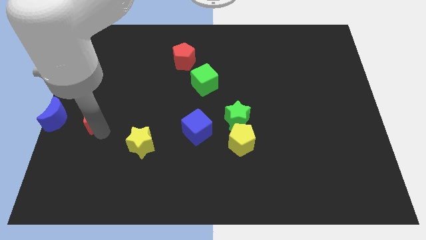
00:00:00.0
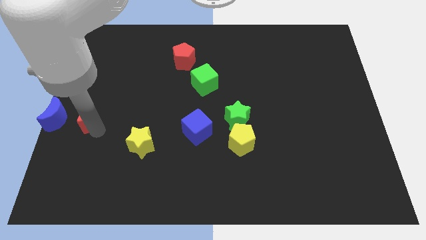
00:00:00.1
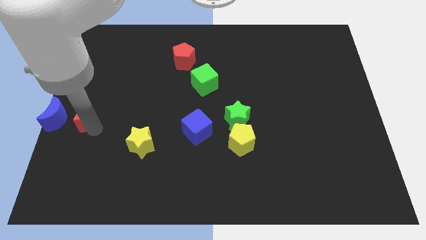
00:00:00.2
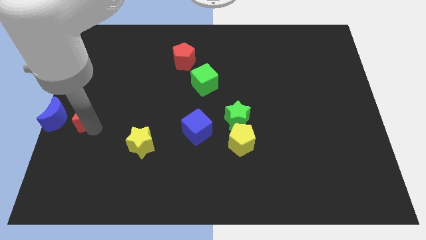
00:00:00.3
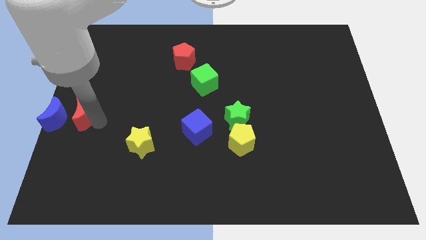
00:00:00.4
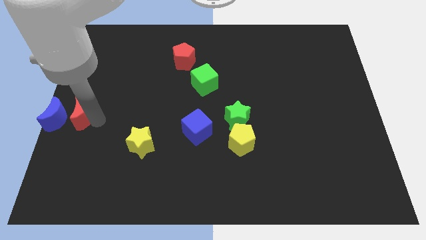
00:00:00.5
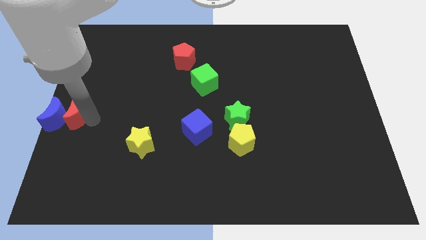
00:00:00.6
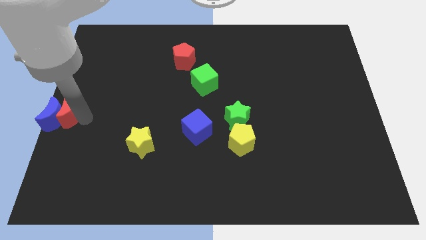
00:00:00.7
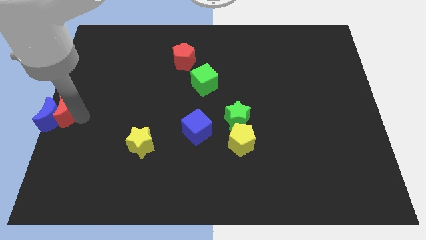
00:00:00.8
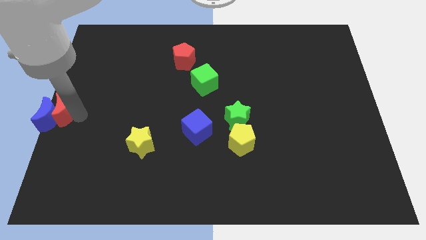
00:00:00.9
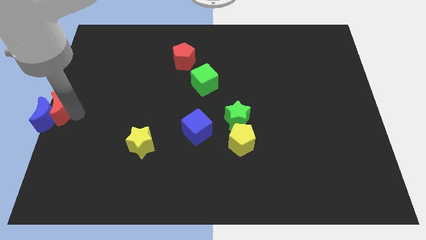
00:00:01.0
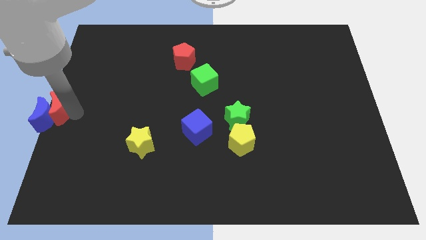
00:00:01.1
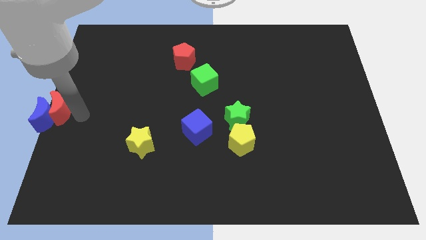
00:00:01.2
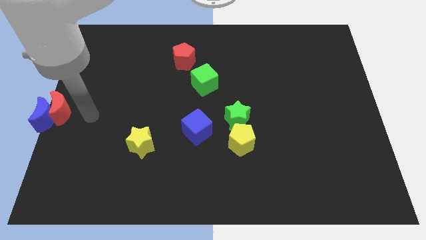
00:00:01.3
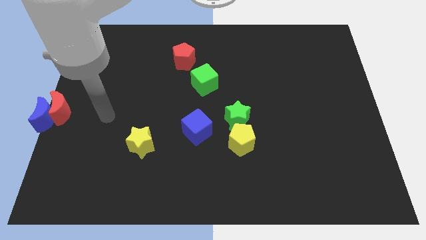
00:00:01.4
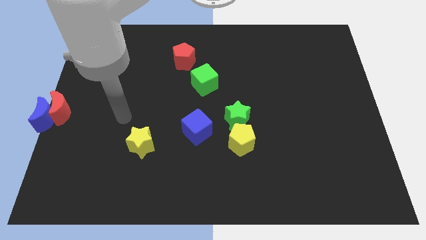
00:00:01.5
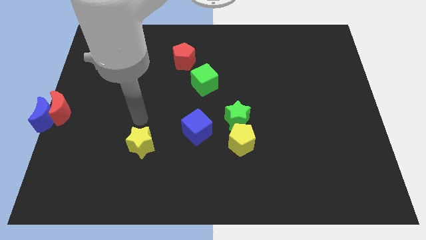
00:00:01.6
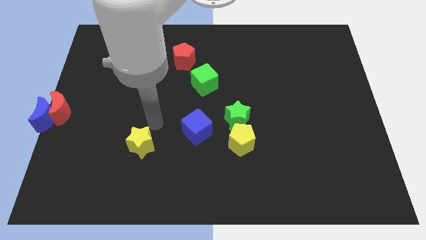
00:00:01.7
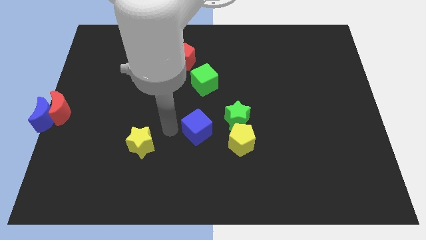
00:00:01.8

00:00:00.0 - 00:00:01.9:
push the red crescent into the blue crescent

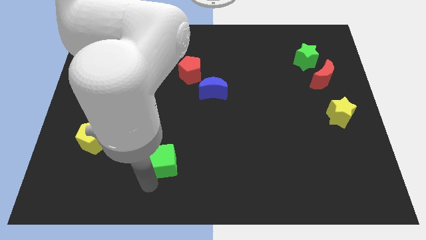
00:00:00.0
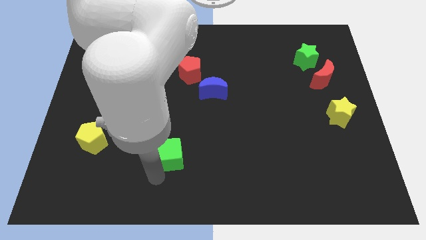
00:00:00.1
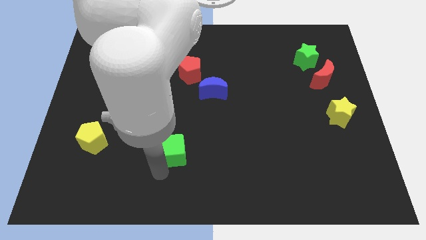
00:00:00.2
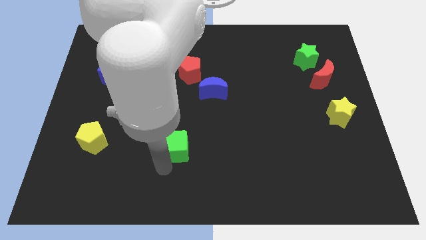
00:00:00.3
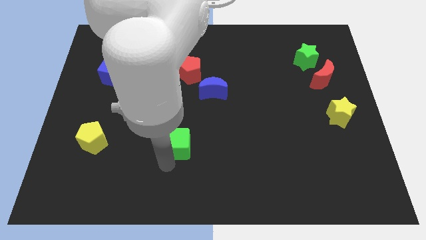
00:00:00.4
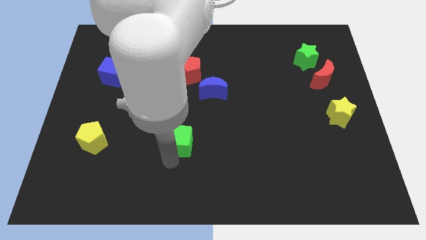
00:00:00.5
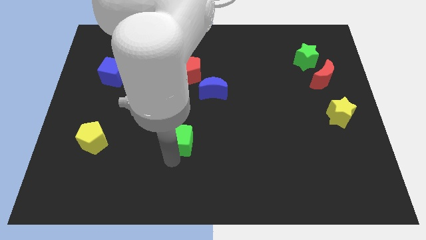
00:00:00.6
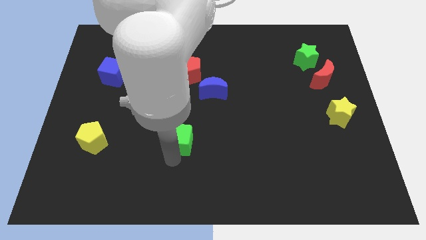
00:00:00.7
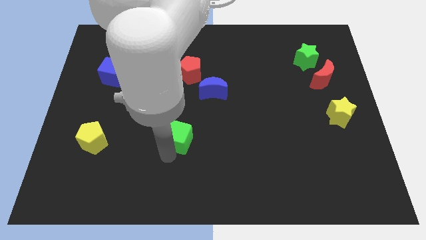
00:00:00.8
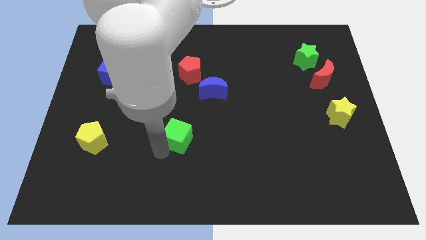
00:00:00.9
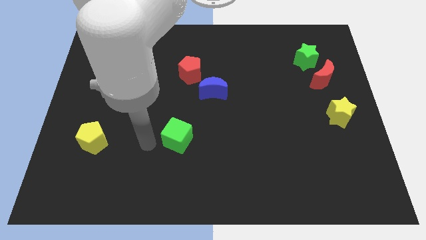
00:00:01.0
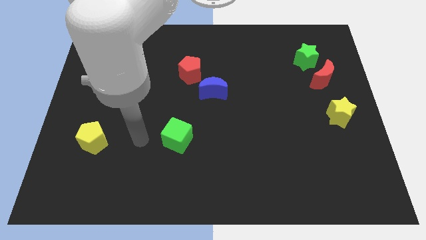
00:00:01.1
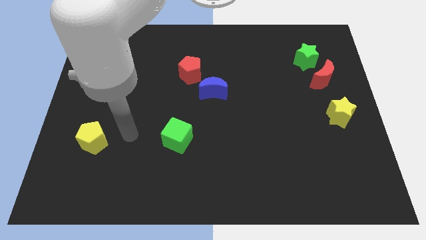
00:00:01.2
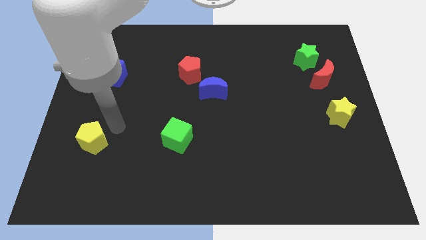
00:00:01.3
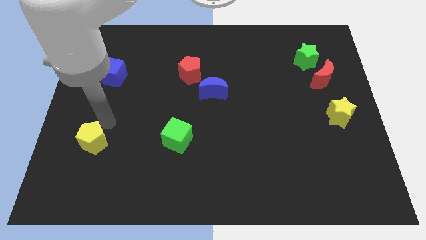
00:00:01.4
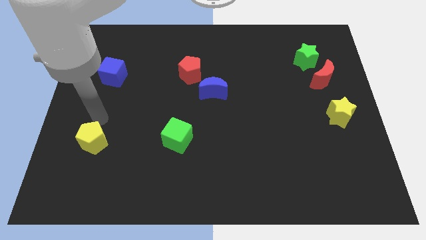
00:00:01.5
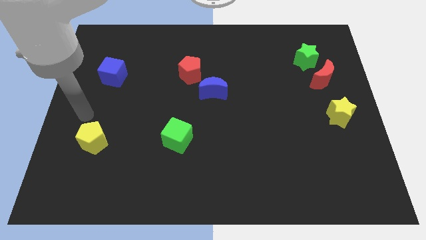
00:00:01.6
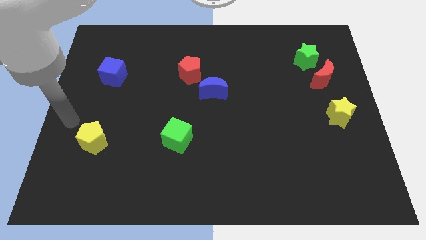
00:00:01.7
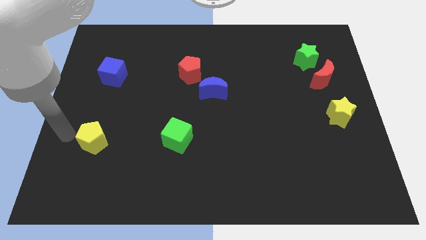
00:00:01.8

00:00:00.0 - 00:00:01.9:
place green cube to the right of yellow pentagon

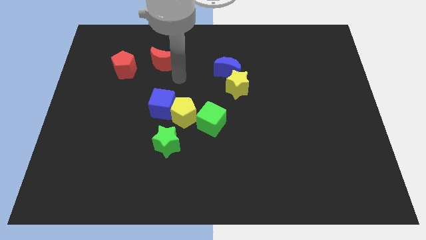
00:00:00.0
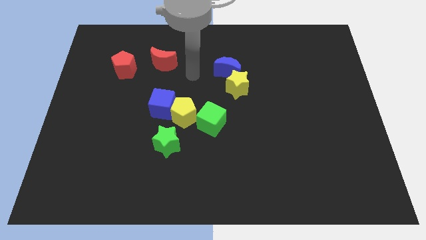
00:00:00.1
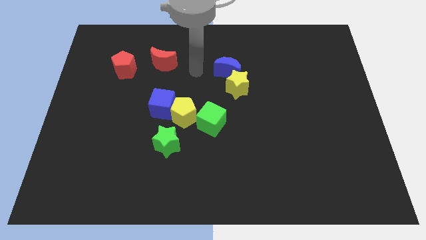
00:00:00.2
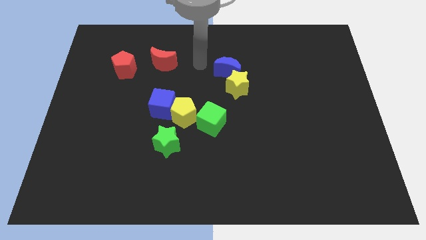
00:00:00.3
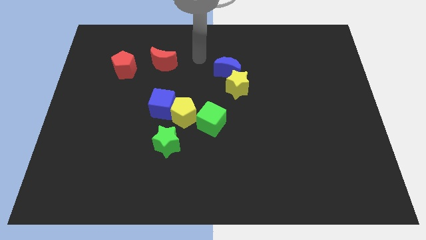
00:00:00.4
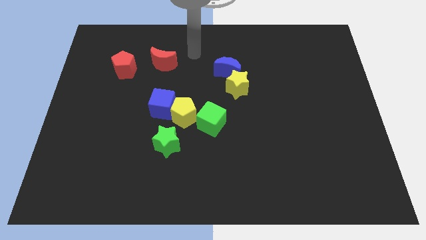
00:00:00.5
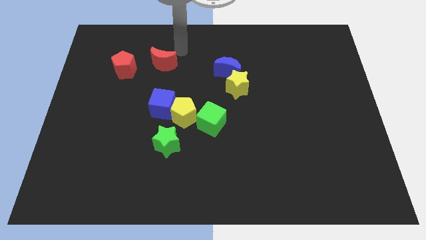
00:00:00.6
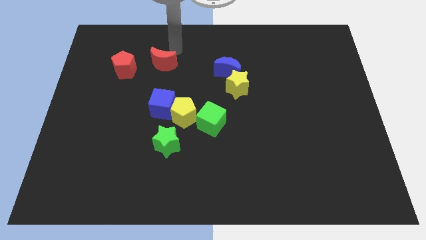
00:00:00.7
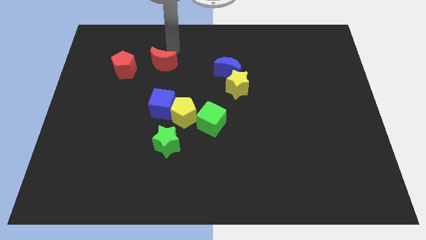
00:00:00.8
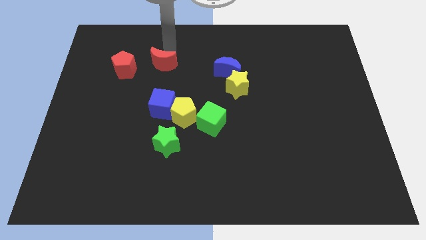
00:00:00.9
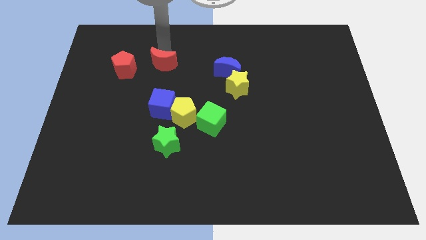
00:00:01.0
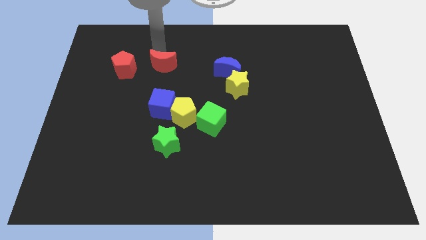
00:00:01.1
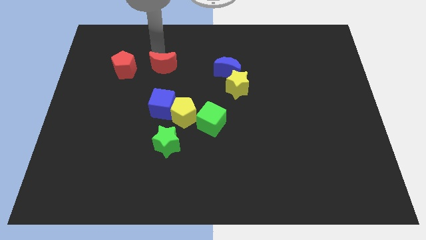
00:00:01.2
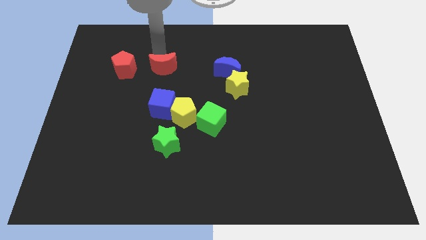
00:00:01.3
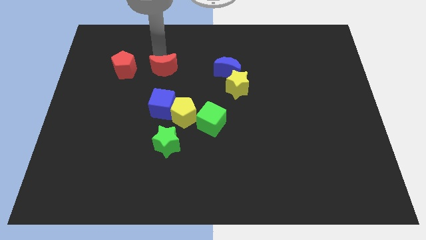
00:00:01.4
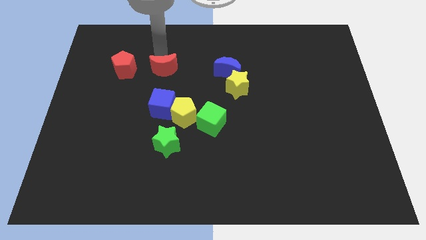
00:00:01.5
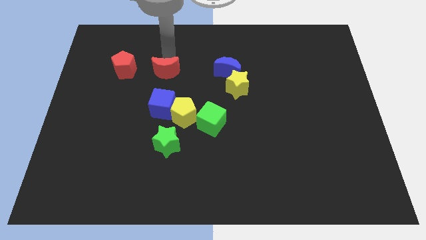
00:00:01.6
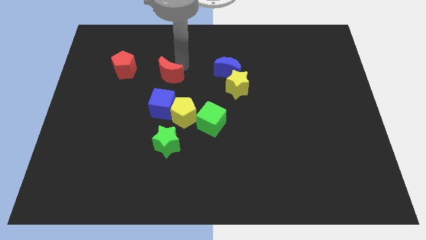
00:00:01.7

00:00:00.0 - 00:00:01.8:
move the red pentagon to the right side of the red pentagon

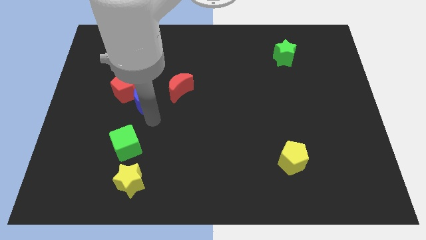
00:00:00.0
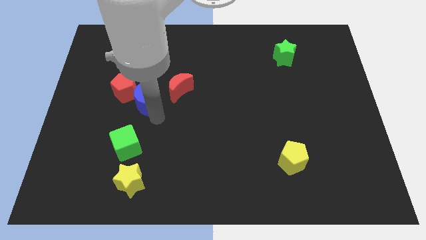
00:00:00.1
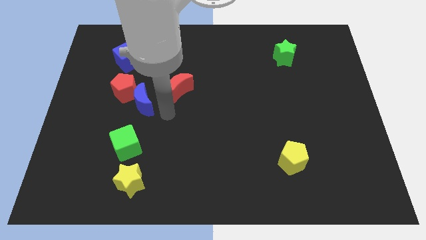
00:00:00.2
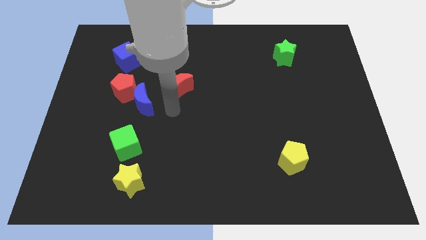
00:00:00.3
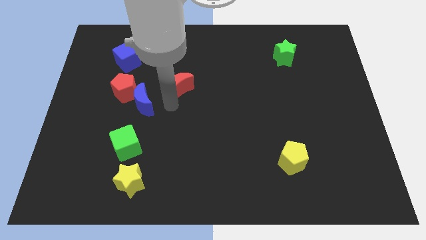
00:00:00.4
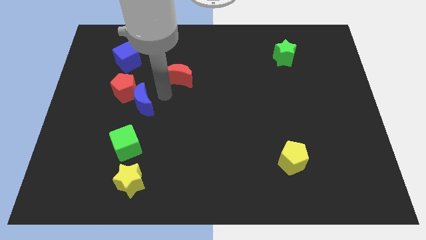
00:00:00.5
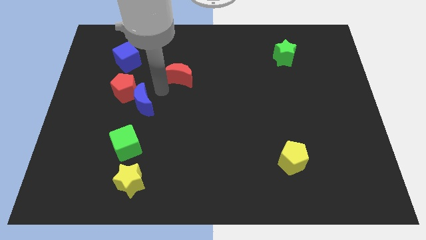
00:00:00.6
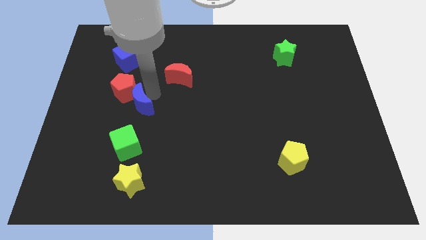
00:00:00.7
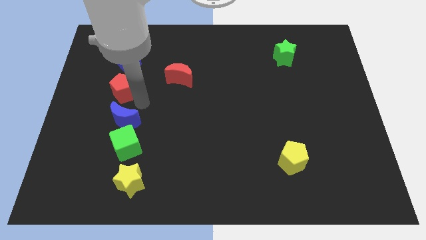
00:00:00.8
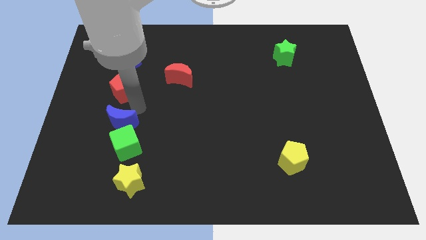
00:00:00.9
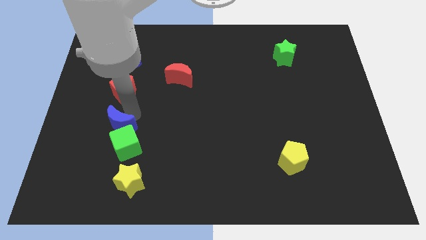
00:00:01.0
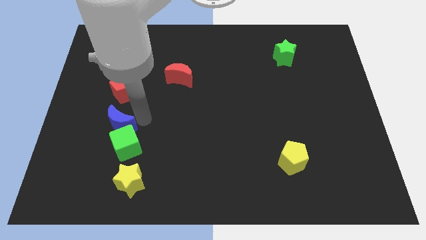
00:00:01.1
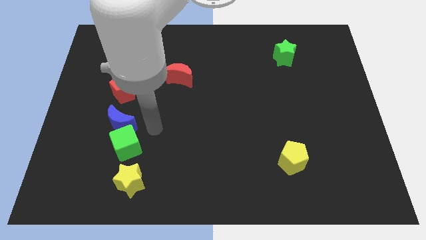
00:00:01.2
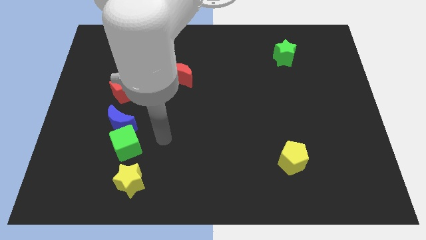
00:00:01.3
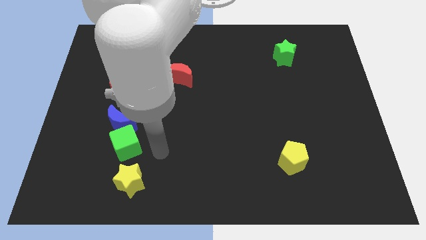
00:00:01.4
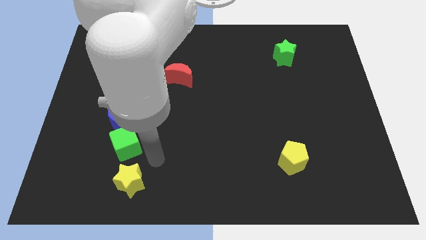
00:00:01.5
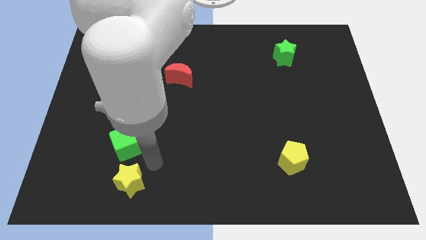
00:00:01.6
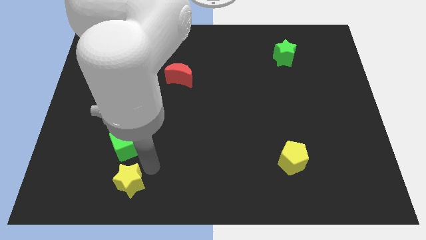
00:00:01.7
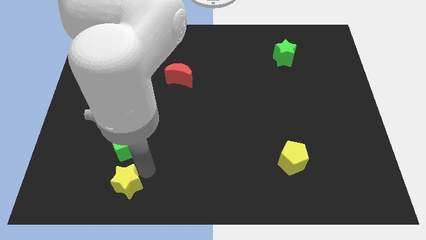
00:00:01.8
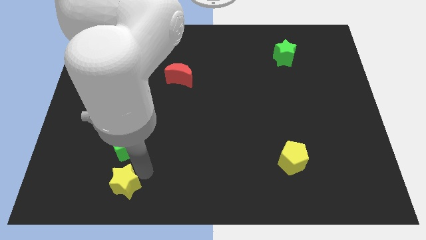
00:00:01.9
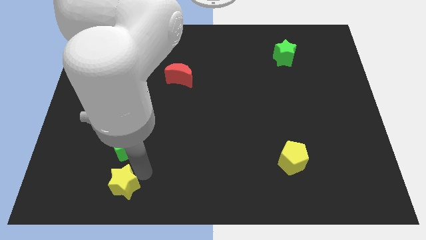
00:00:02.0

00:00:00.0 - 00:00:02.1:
push blue crescent into the green cube

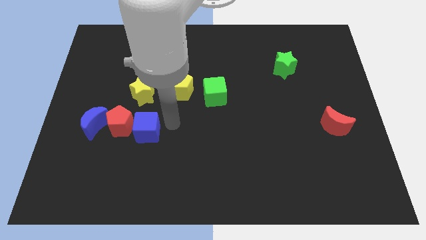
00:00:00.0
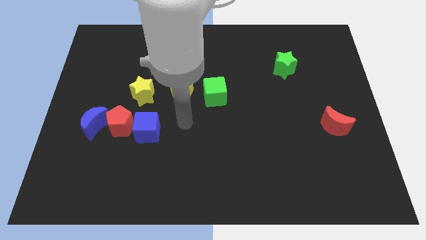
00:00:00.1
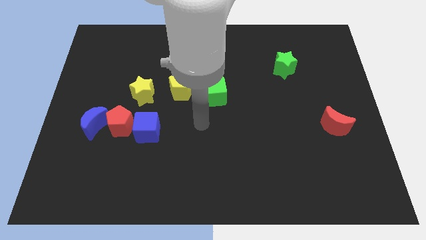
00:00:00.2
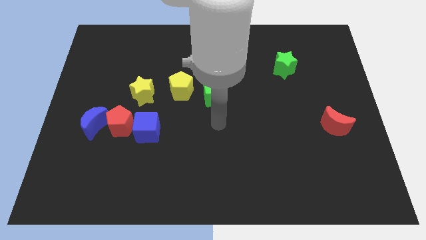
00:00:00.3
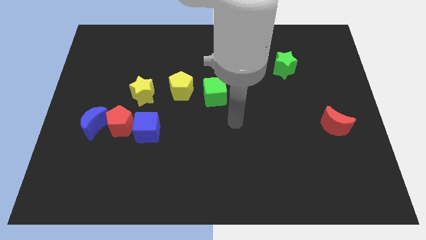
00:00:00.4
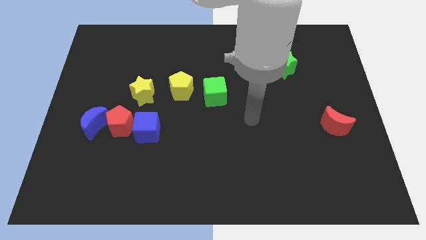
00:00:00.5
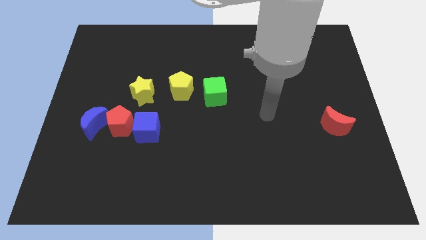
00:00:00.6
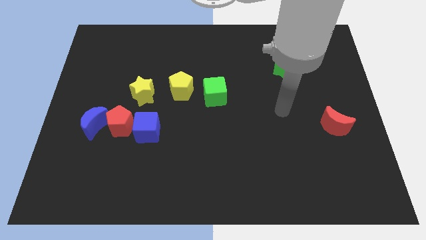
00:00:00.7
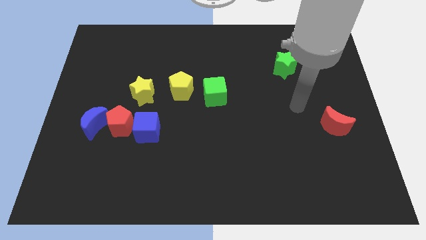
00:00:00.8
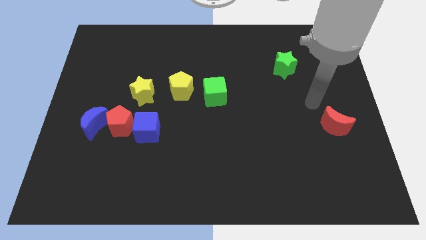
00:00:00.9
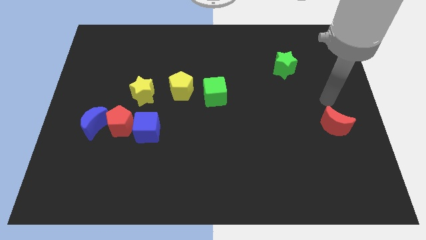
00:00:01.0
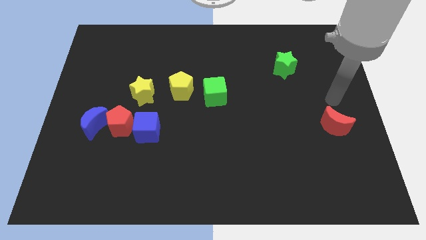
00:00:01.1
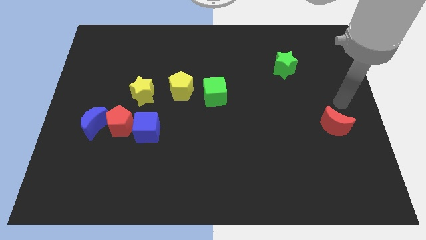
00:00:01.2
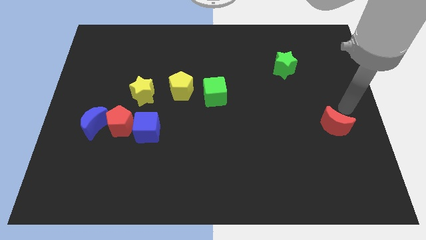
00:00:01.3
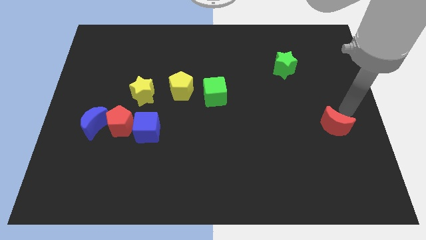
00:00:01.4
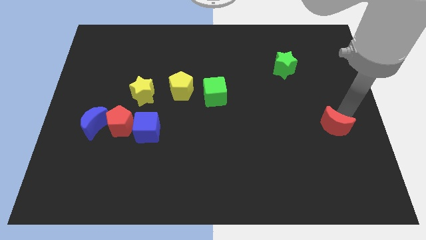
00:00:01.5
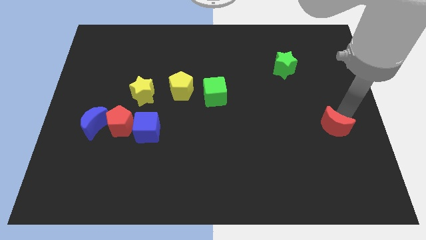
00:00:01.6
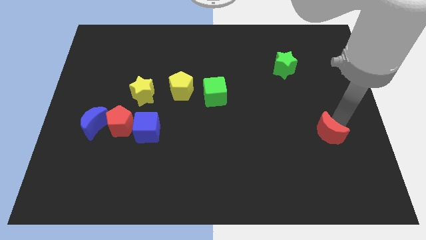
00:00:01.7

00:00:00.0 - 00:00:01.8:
move your arm away from the blue cube
